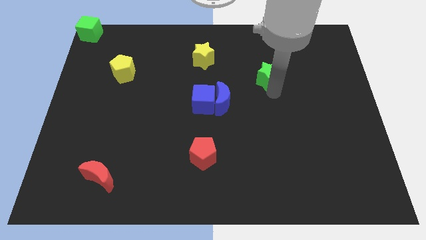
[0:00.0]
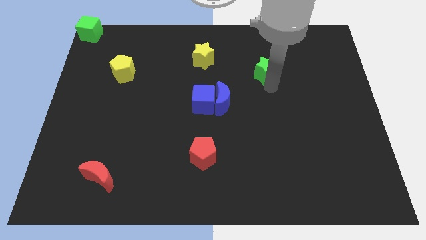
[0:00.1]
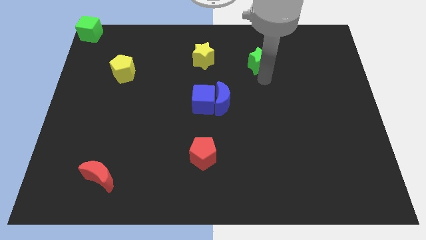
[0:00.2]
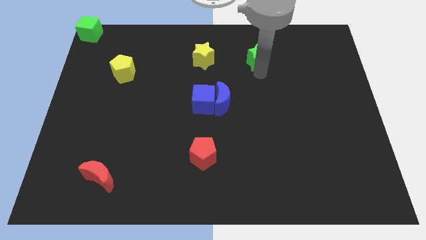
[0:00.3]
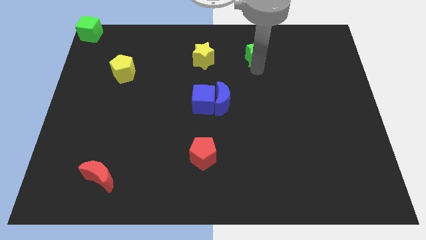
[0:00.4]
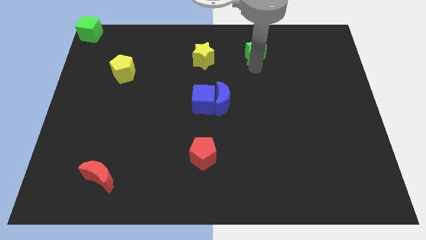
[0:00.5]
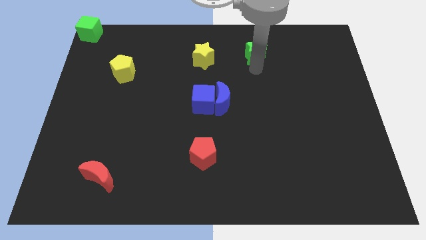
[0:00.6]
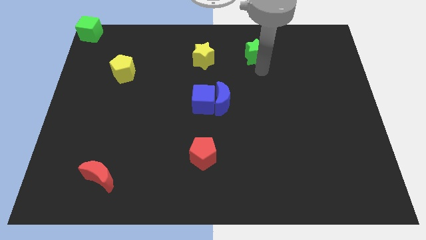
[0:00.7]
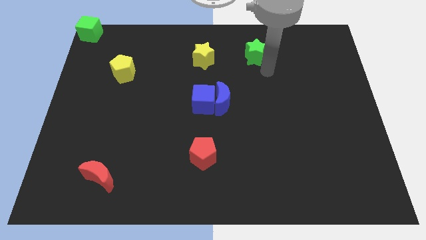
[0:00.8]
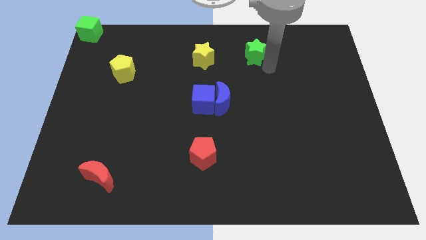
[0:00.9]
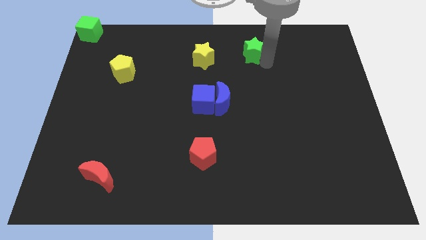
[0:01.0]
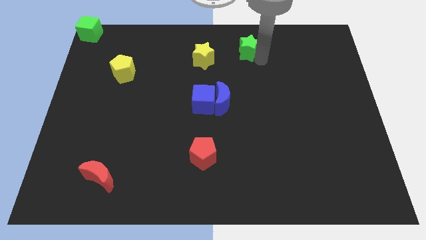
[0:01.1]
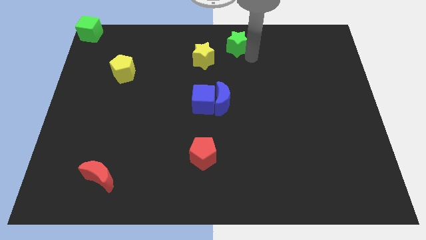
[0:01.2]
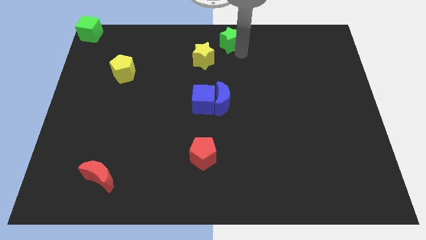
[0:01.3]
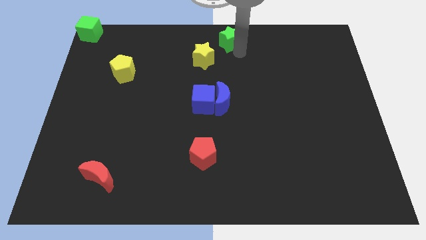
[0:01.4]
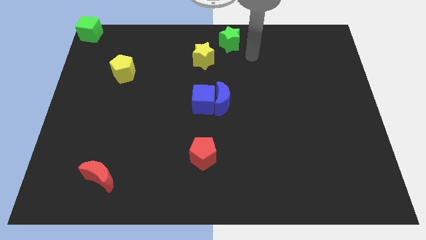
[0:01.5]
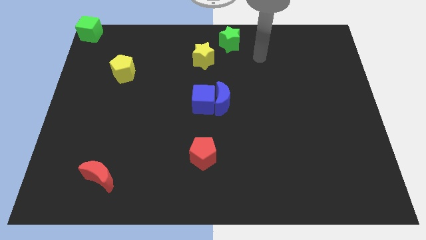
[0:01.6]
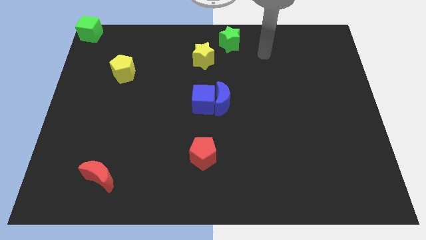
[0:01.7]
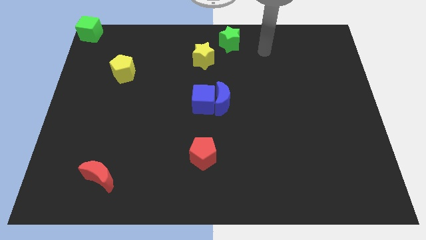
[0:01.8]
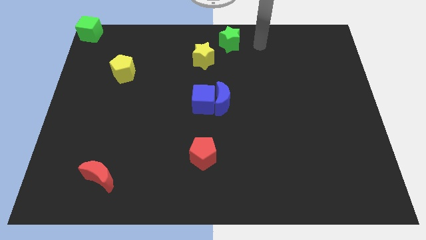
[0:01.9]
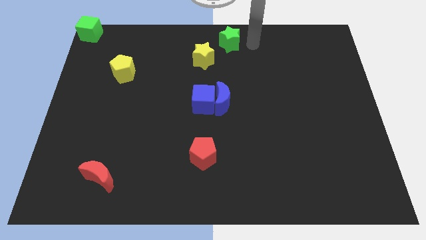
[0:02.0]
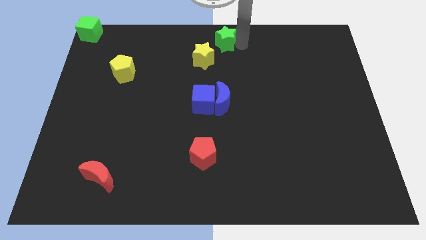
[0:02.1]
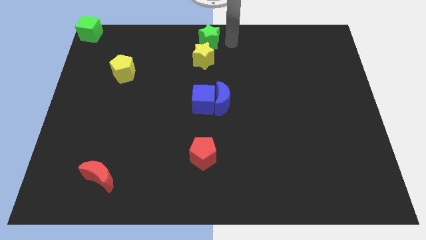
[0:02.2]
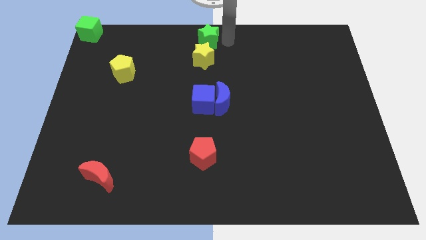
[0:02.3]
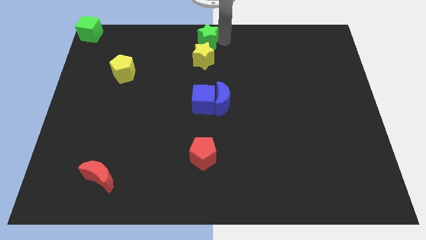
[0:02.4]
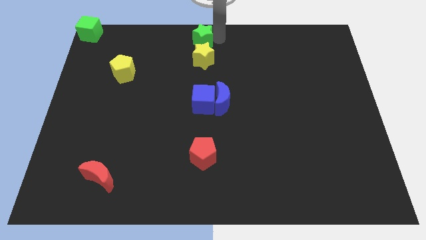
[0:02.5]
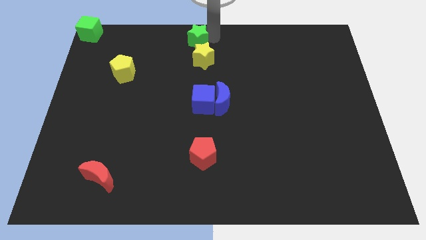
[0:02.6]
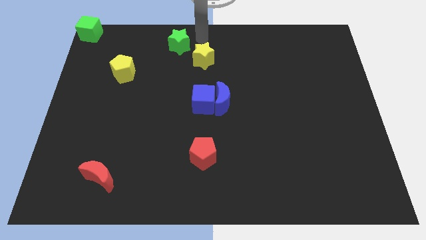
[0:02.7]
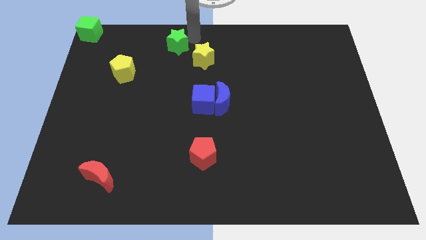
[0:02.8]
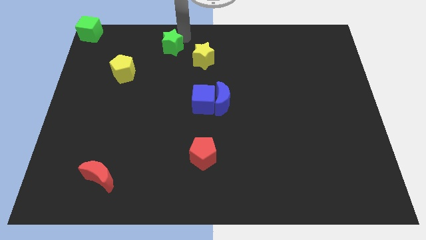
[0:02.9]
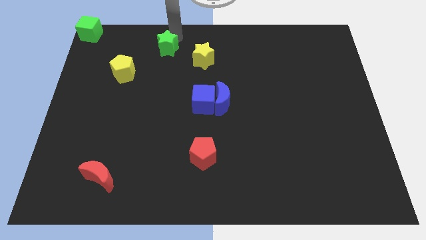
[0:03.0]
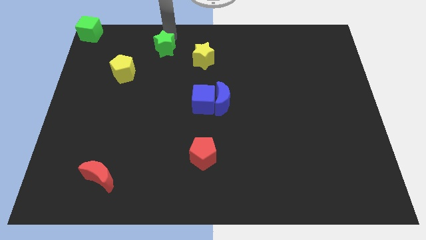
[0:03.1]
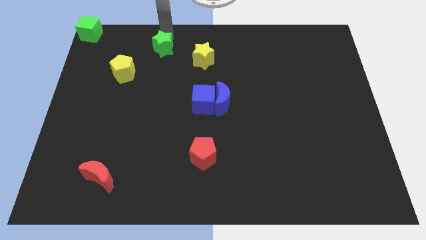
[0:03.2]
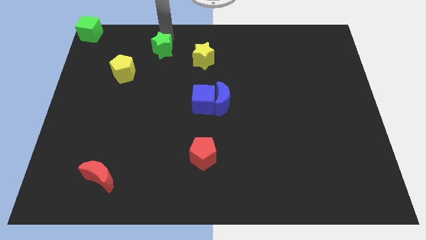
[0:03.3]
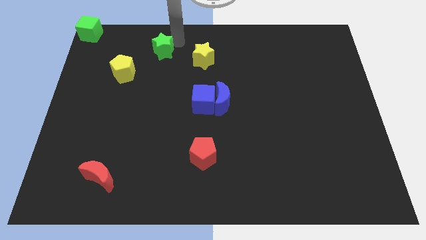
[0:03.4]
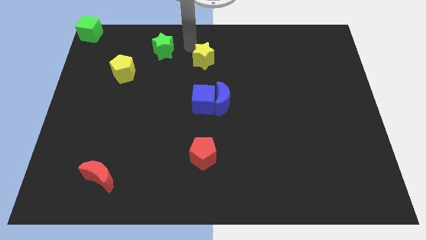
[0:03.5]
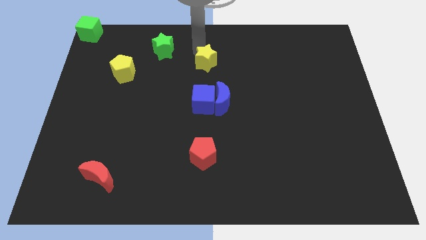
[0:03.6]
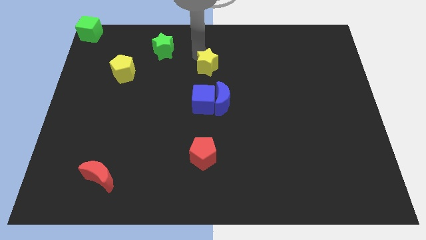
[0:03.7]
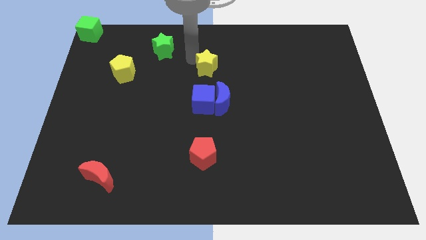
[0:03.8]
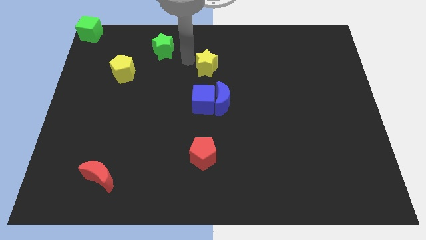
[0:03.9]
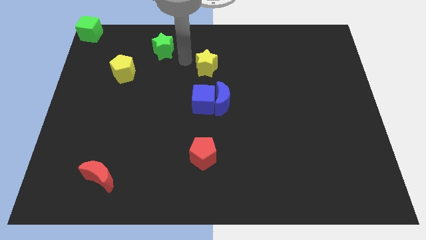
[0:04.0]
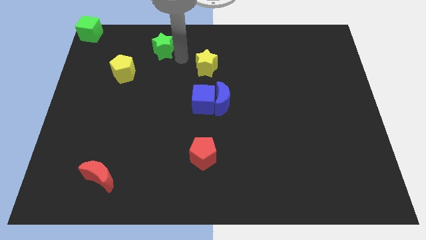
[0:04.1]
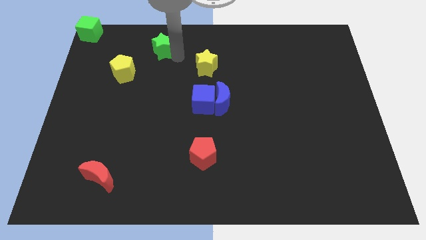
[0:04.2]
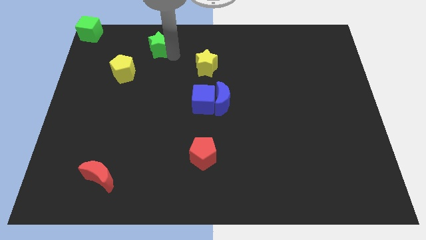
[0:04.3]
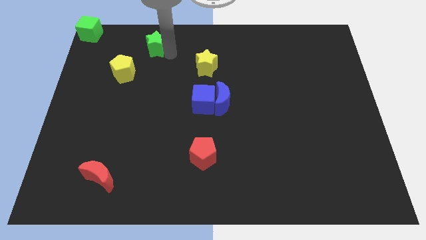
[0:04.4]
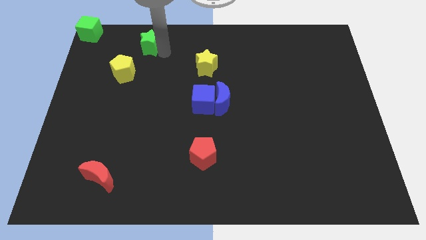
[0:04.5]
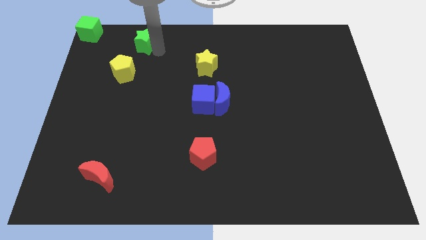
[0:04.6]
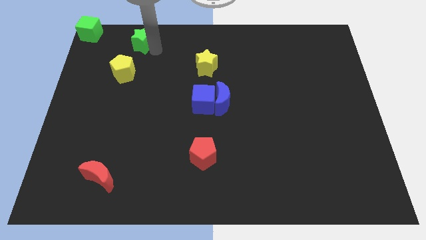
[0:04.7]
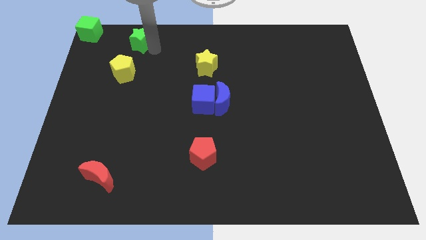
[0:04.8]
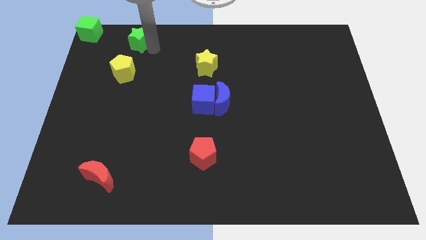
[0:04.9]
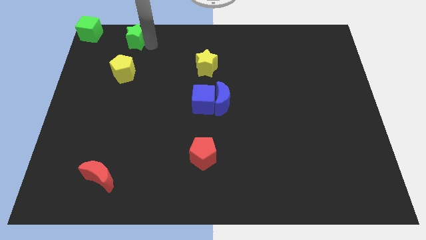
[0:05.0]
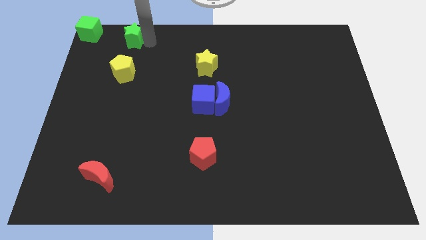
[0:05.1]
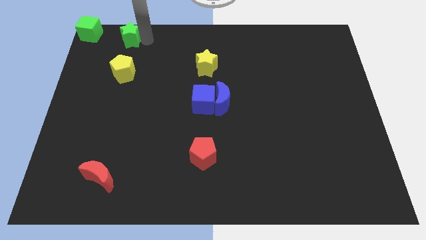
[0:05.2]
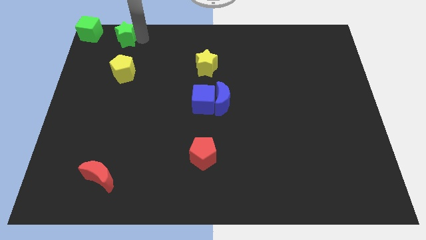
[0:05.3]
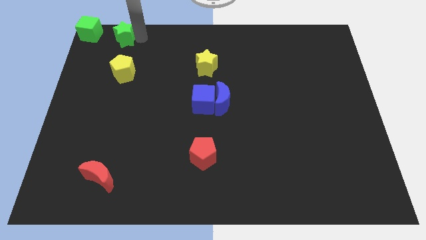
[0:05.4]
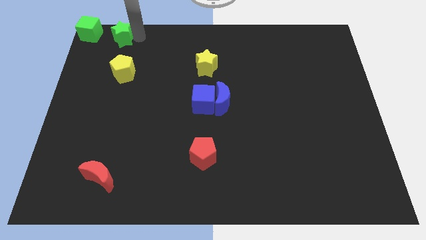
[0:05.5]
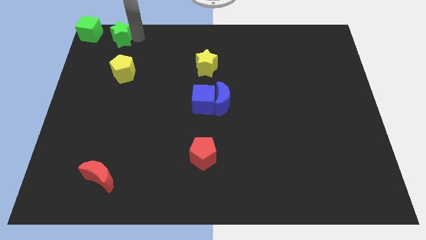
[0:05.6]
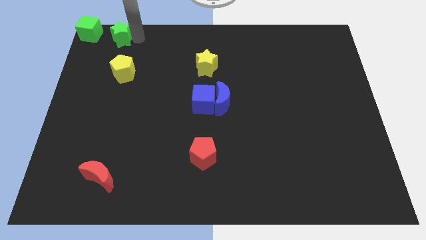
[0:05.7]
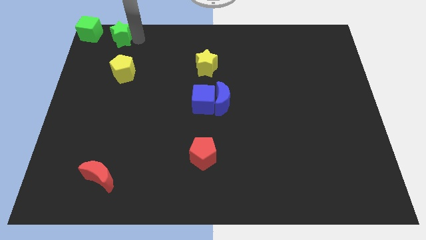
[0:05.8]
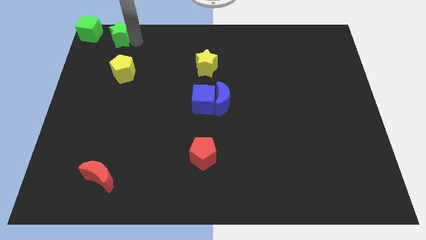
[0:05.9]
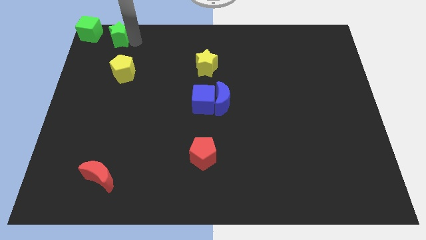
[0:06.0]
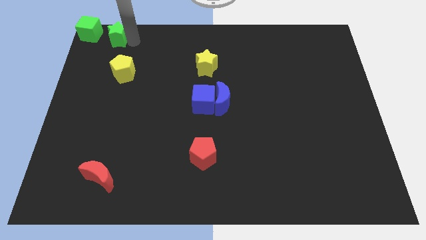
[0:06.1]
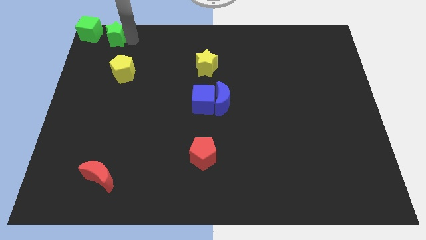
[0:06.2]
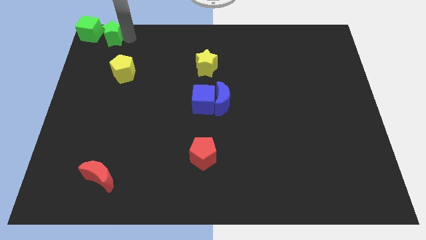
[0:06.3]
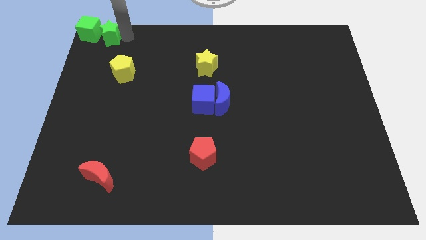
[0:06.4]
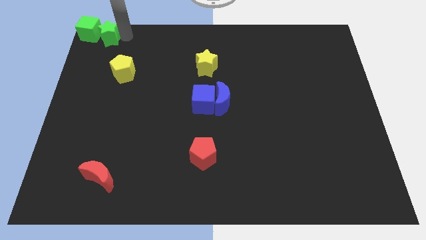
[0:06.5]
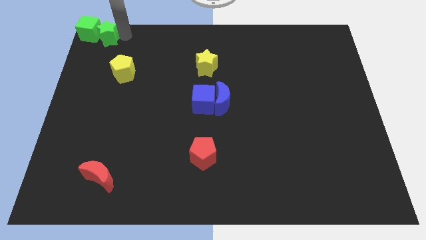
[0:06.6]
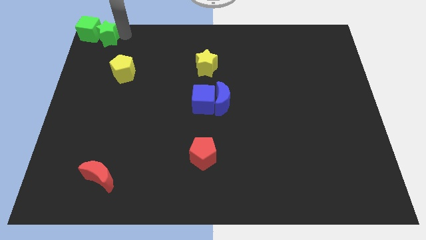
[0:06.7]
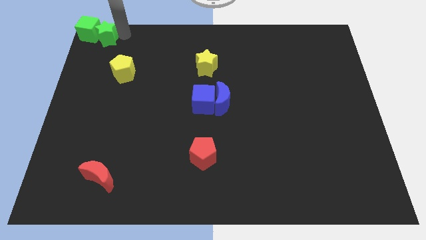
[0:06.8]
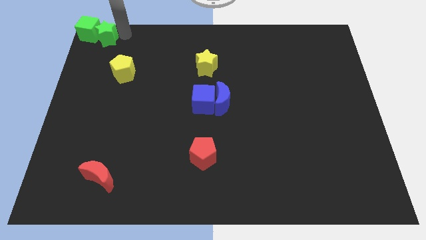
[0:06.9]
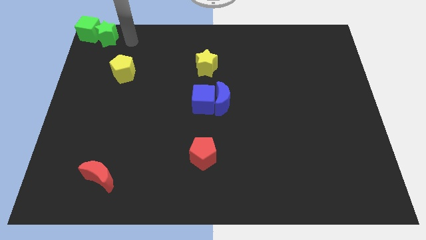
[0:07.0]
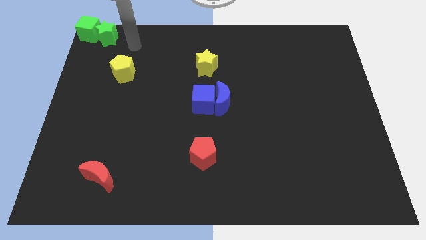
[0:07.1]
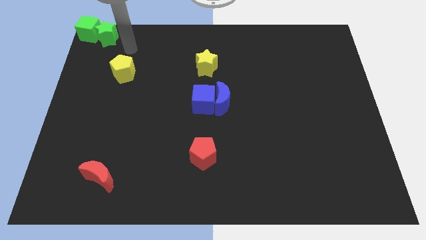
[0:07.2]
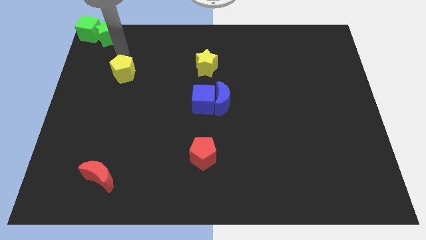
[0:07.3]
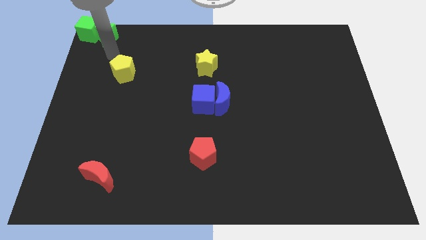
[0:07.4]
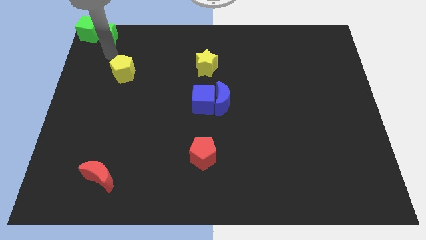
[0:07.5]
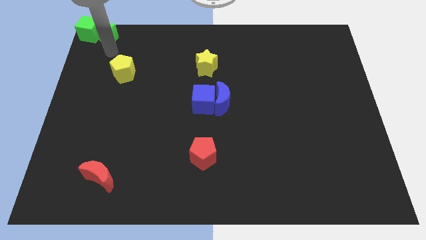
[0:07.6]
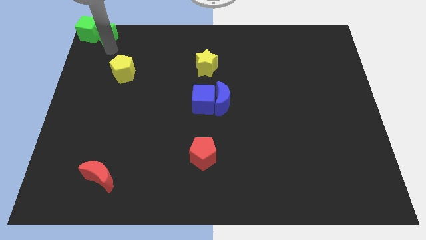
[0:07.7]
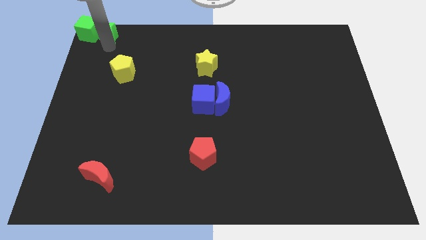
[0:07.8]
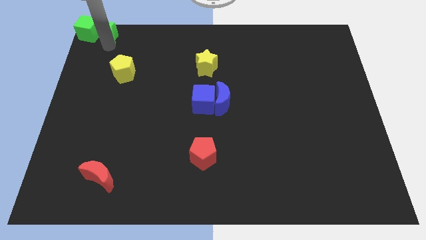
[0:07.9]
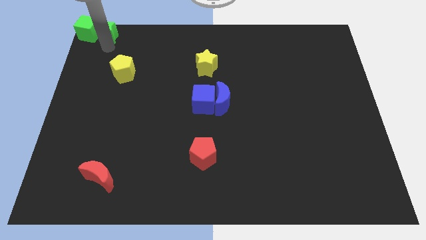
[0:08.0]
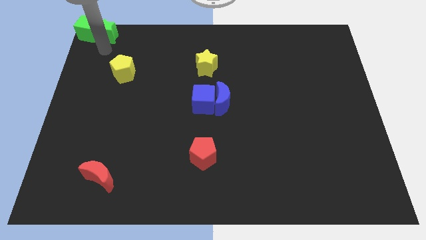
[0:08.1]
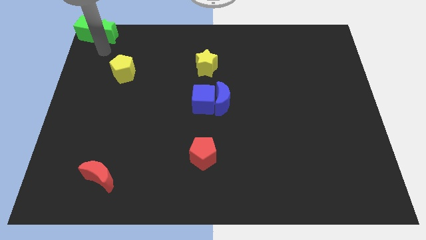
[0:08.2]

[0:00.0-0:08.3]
move the green star to the right side of the green cube on the board

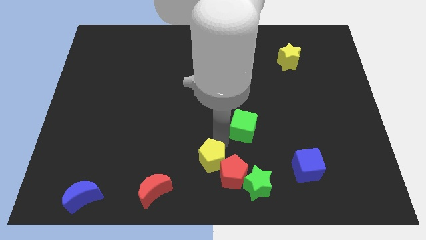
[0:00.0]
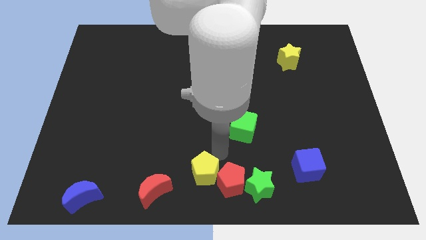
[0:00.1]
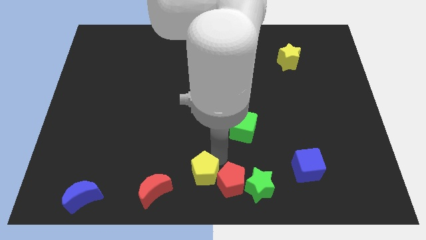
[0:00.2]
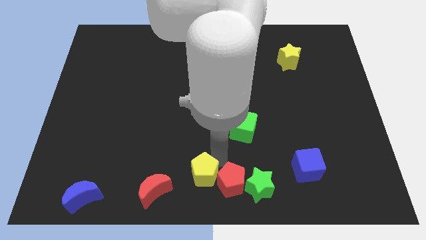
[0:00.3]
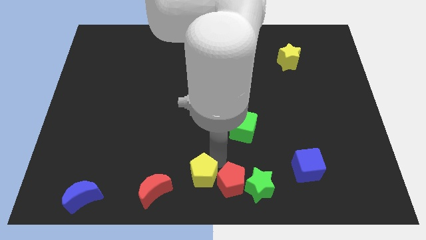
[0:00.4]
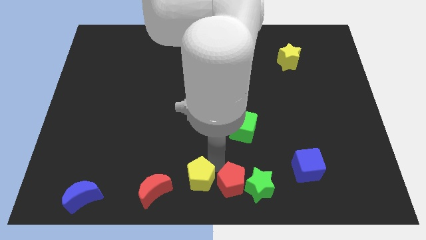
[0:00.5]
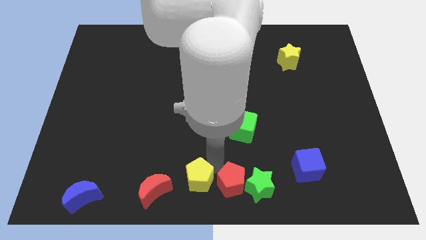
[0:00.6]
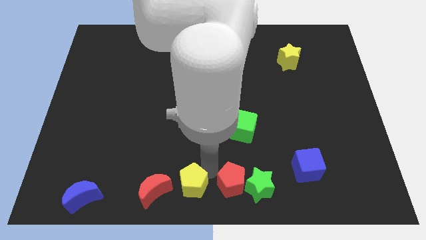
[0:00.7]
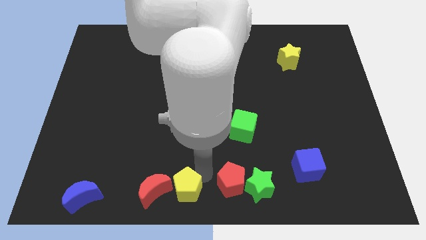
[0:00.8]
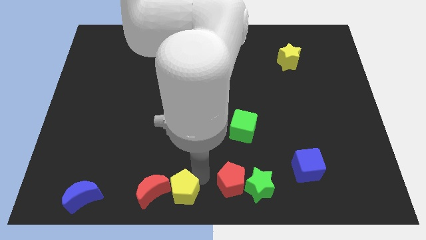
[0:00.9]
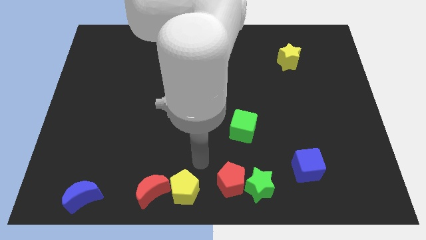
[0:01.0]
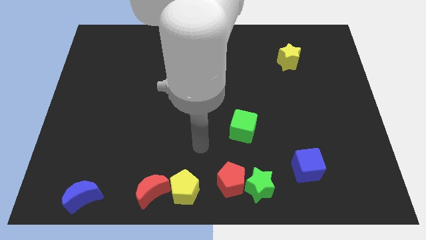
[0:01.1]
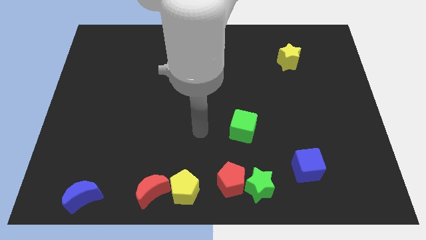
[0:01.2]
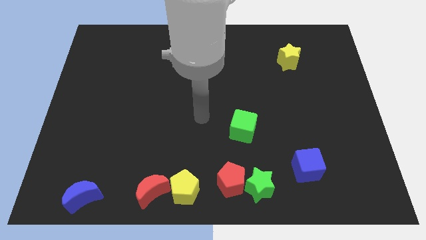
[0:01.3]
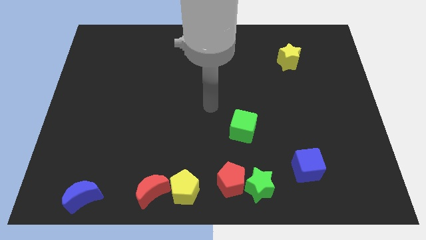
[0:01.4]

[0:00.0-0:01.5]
place the yellow pentagon to the right side of the red crescent
